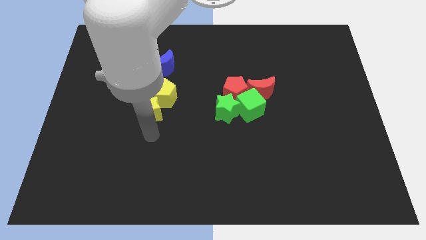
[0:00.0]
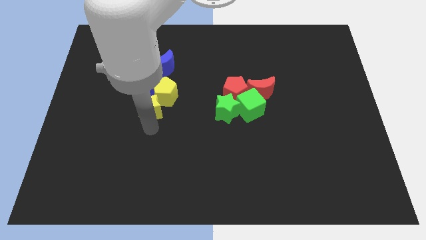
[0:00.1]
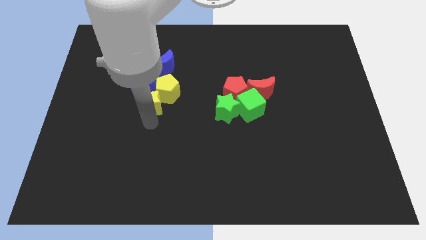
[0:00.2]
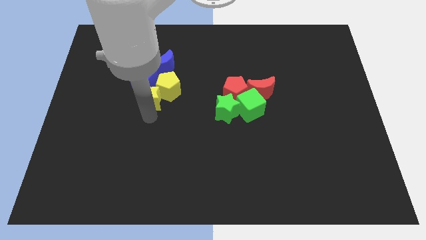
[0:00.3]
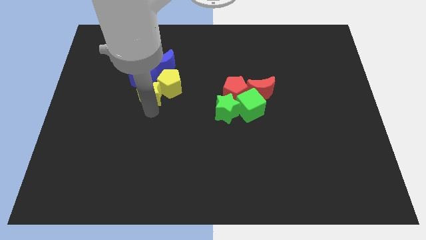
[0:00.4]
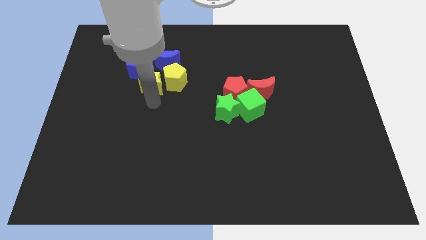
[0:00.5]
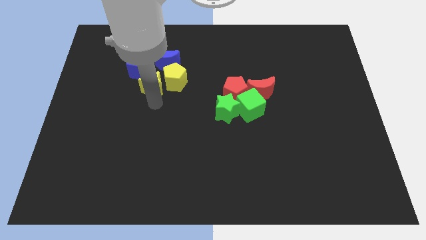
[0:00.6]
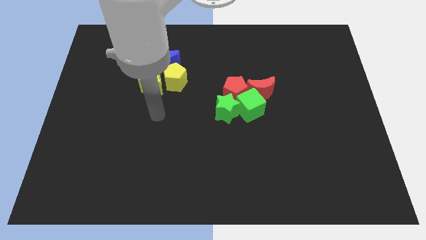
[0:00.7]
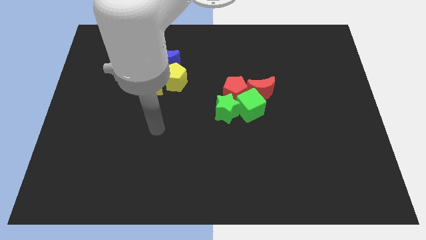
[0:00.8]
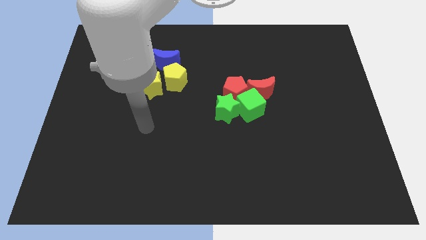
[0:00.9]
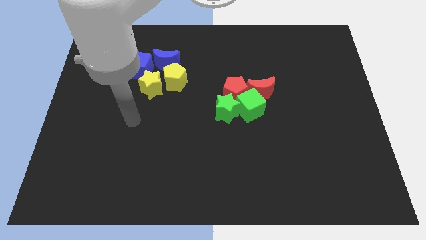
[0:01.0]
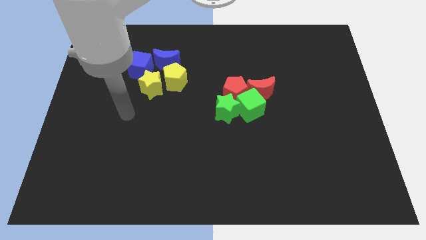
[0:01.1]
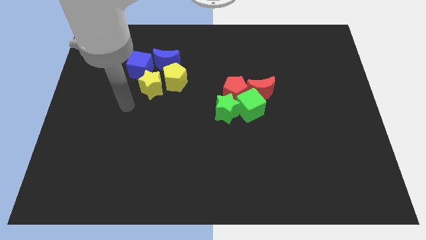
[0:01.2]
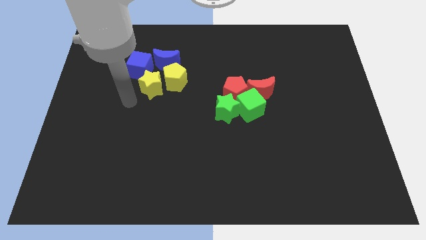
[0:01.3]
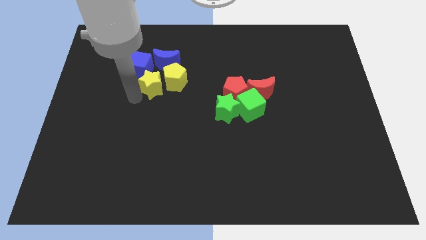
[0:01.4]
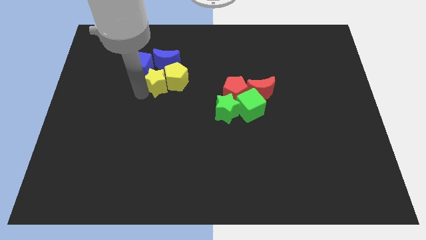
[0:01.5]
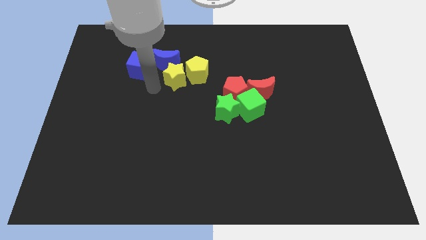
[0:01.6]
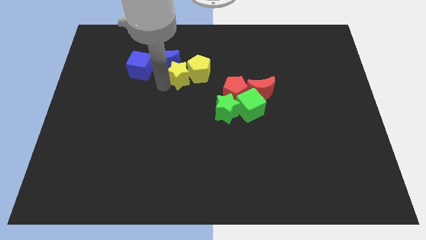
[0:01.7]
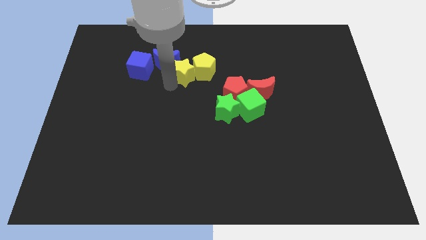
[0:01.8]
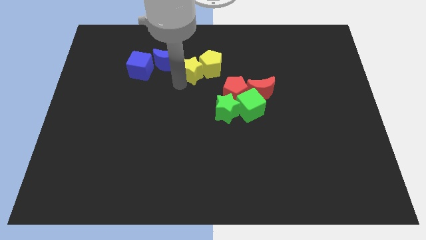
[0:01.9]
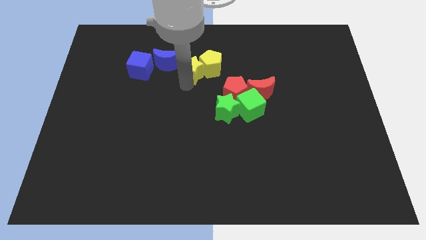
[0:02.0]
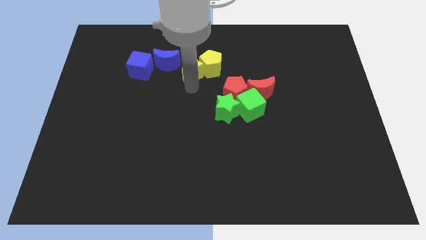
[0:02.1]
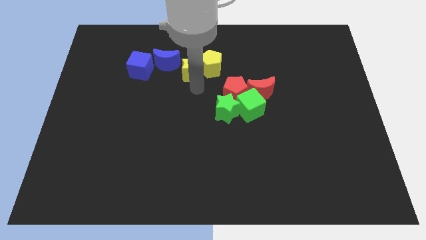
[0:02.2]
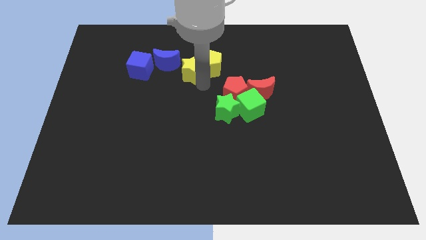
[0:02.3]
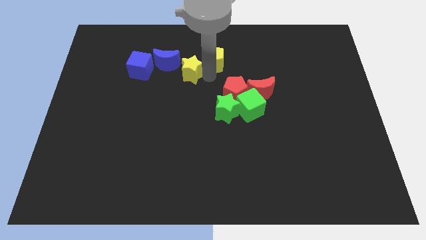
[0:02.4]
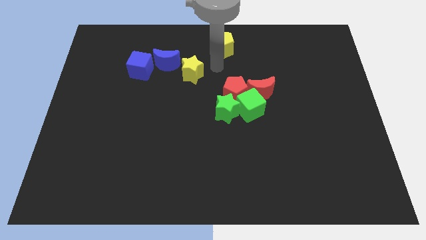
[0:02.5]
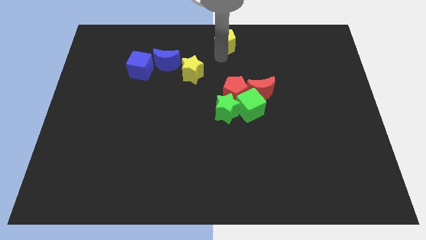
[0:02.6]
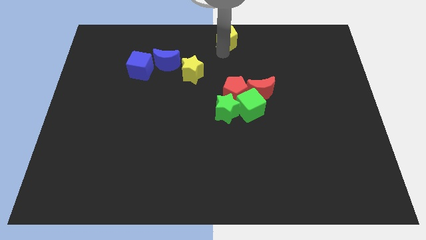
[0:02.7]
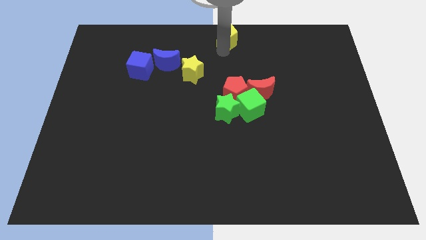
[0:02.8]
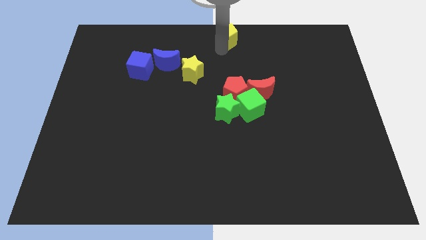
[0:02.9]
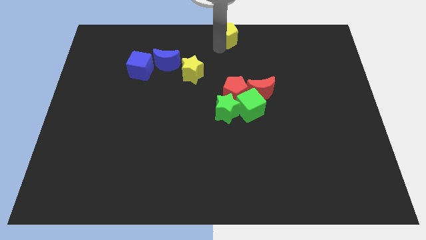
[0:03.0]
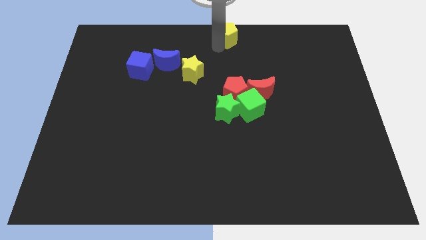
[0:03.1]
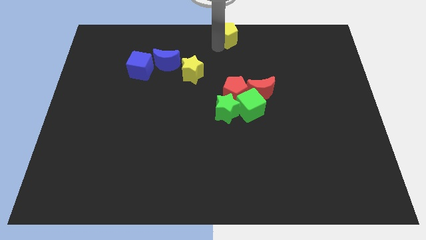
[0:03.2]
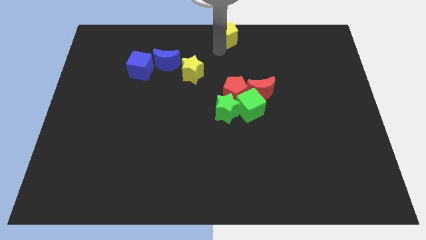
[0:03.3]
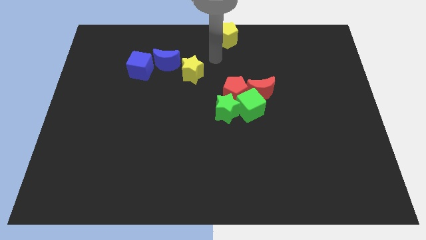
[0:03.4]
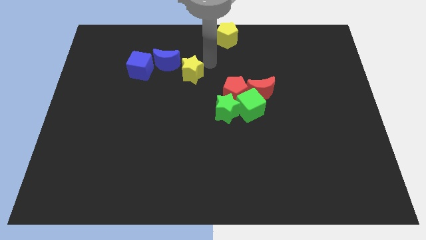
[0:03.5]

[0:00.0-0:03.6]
push the yellow pentagon above the red pentagon

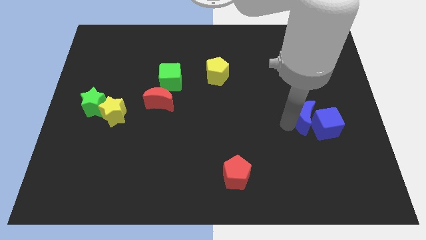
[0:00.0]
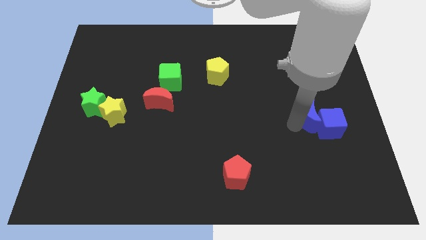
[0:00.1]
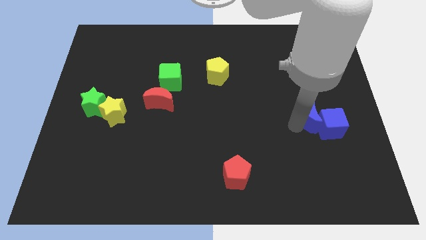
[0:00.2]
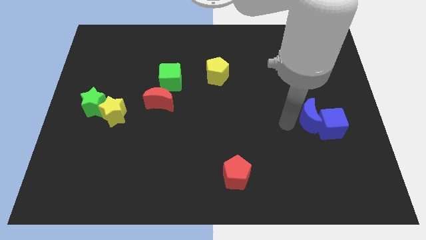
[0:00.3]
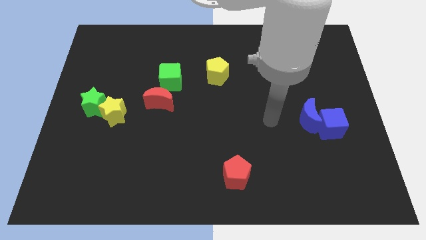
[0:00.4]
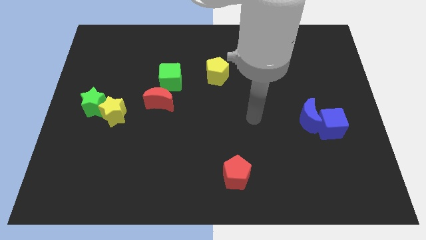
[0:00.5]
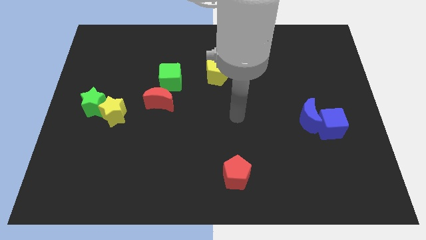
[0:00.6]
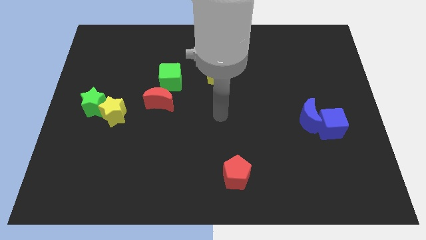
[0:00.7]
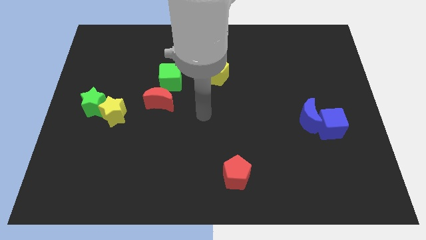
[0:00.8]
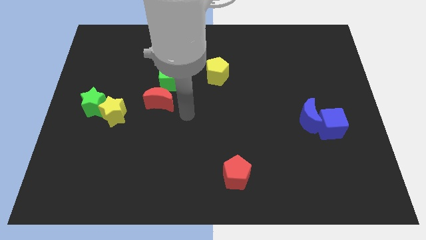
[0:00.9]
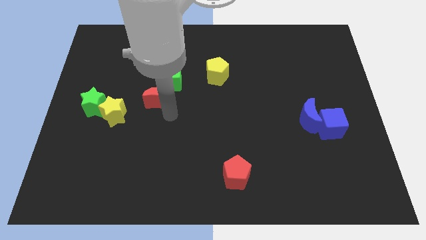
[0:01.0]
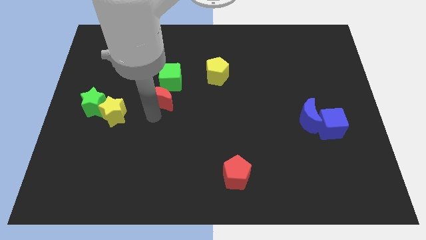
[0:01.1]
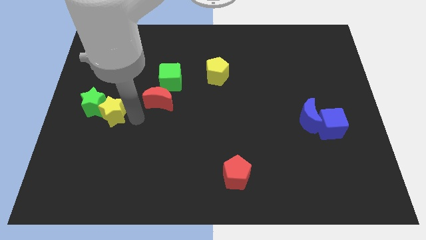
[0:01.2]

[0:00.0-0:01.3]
move the arm to the right of the yellow star

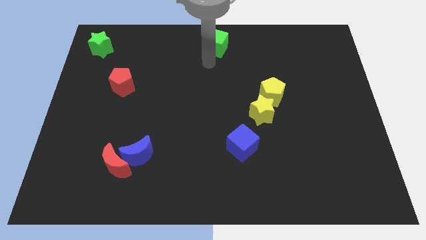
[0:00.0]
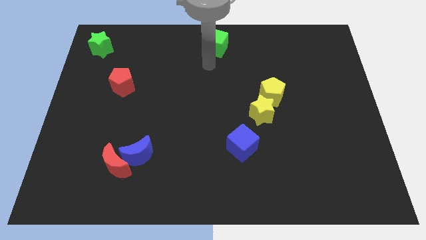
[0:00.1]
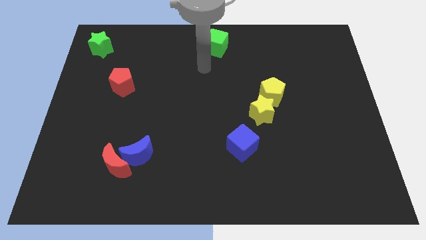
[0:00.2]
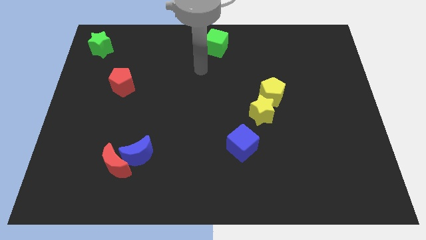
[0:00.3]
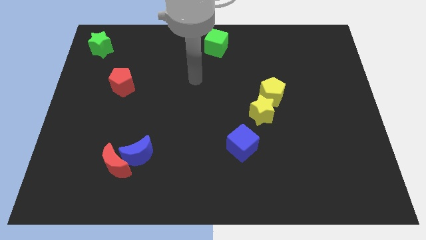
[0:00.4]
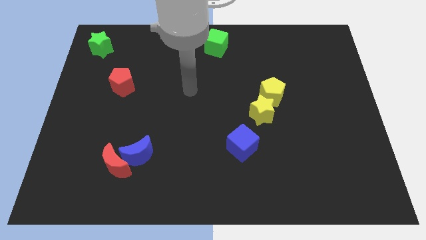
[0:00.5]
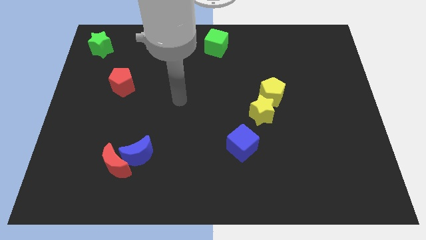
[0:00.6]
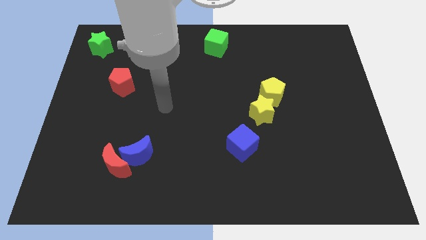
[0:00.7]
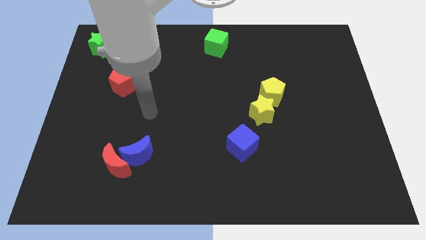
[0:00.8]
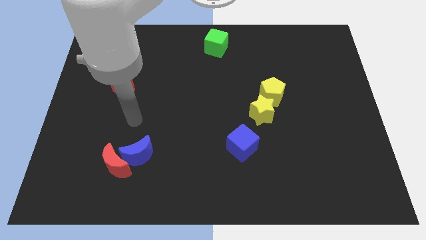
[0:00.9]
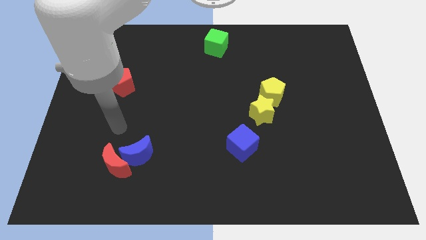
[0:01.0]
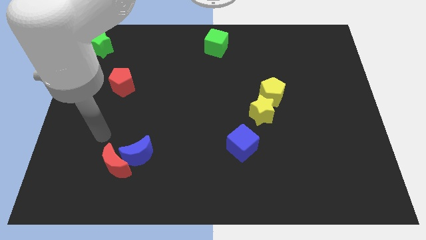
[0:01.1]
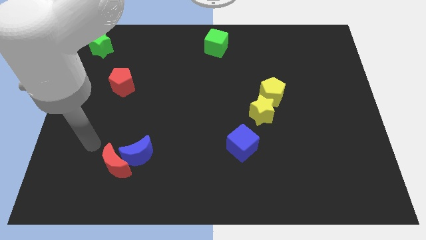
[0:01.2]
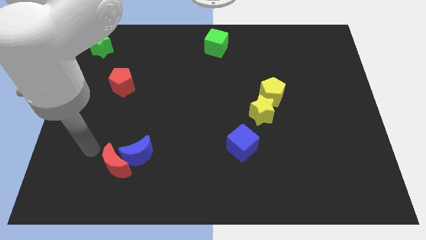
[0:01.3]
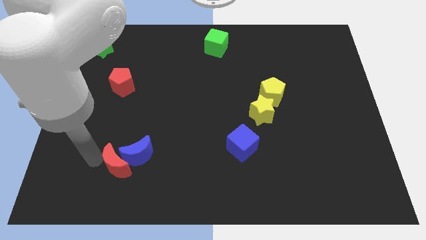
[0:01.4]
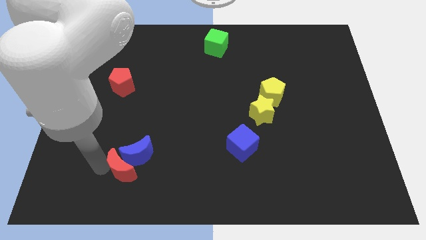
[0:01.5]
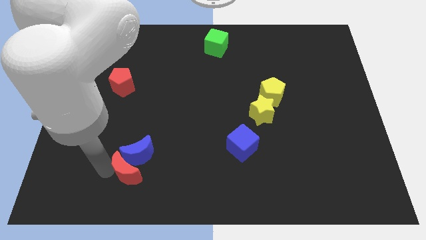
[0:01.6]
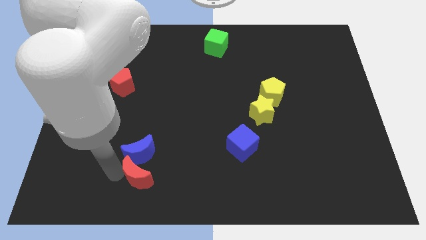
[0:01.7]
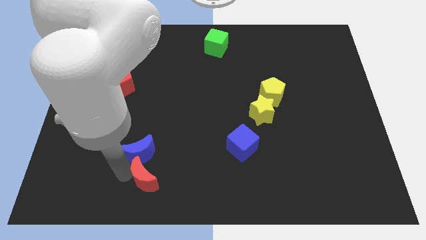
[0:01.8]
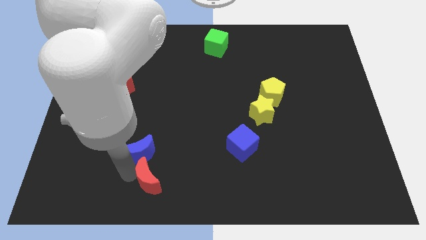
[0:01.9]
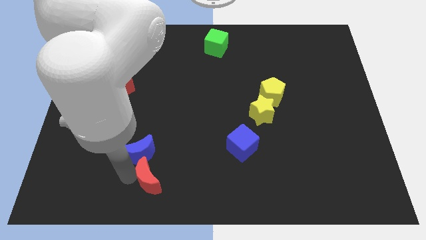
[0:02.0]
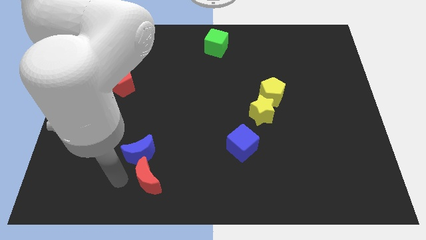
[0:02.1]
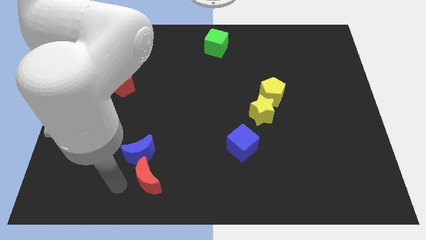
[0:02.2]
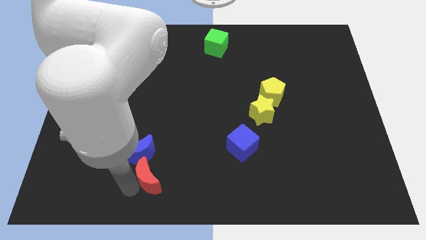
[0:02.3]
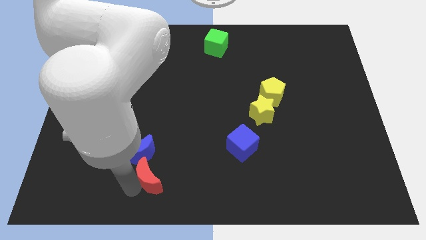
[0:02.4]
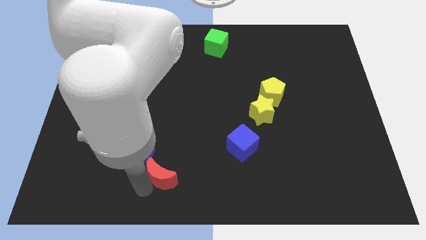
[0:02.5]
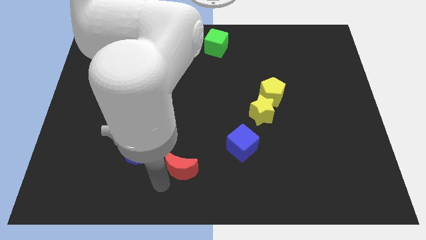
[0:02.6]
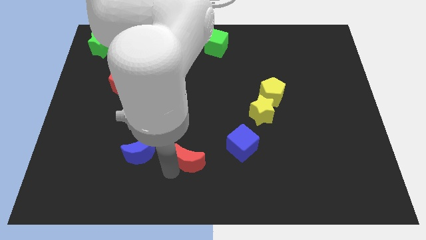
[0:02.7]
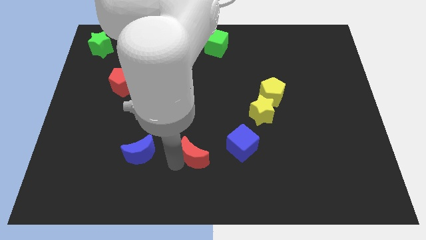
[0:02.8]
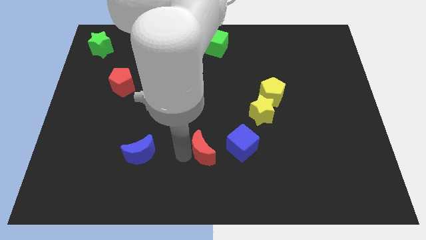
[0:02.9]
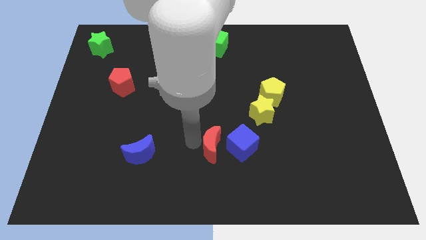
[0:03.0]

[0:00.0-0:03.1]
place the red moon in between the blue blocks

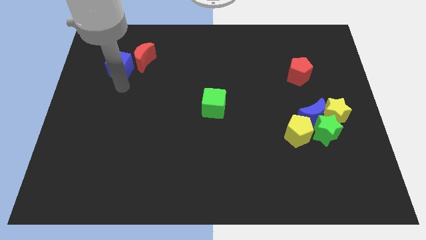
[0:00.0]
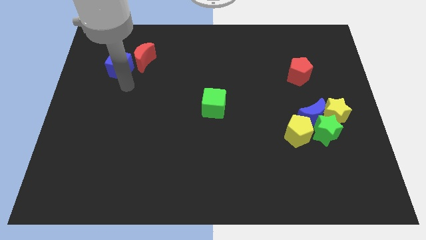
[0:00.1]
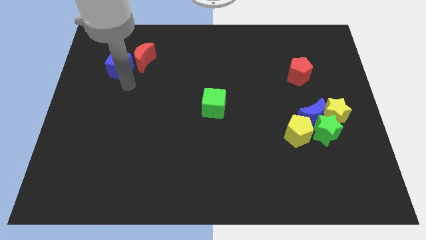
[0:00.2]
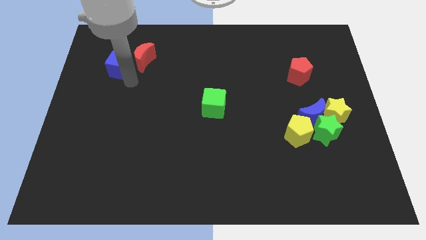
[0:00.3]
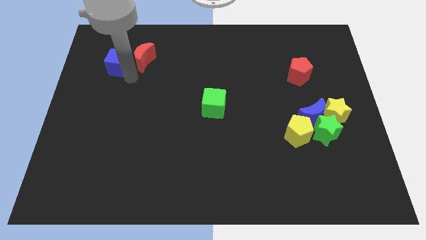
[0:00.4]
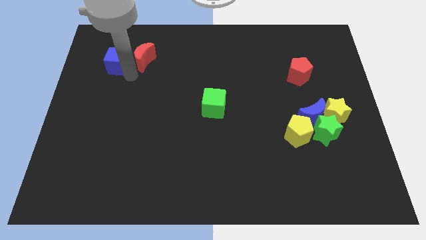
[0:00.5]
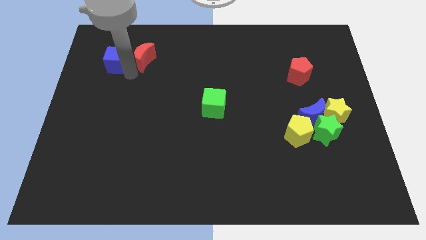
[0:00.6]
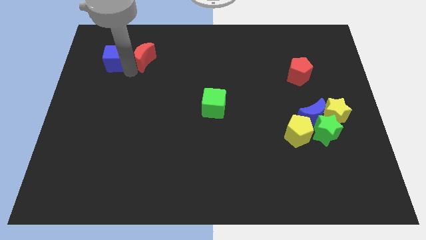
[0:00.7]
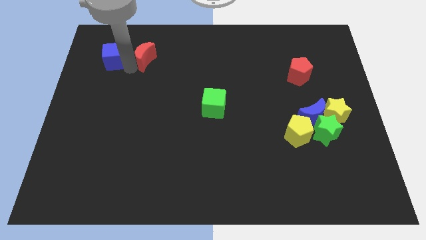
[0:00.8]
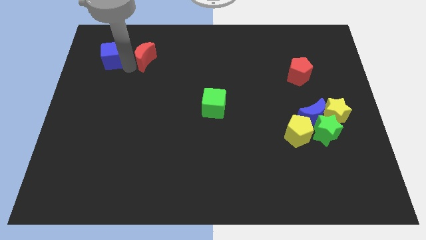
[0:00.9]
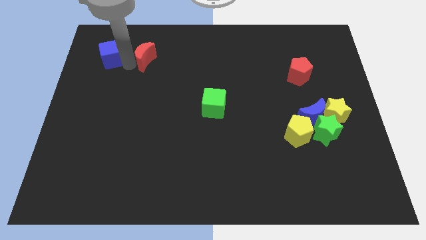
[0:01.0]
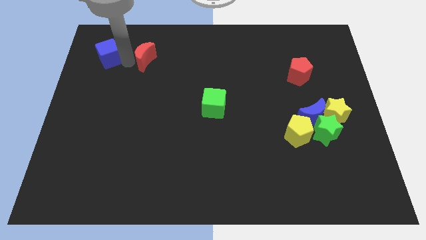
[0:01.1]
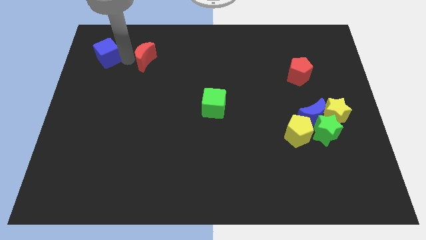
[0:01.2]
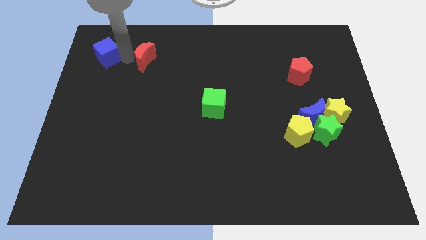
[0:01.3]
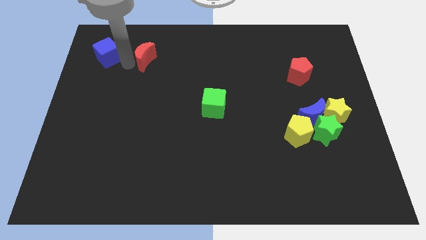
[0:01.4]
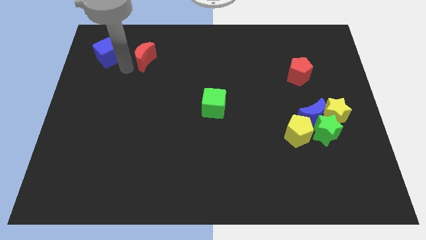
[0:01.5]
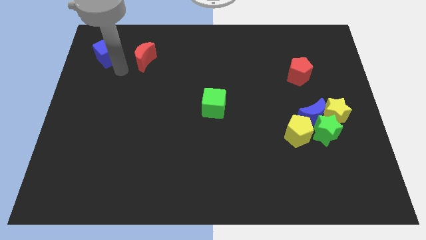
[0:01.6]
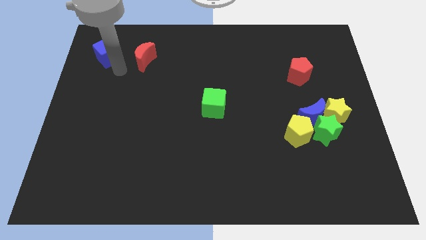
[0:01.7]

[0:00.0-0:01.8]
slide the blue cube towards the top left
